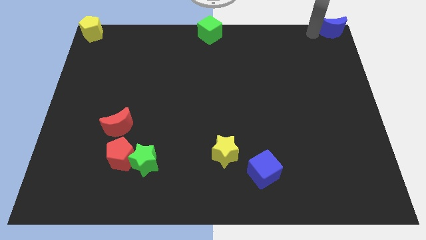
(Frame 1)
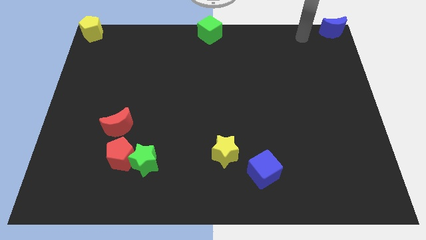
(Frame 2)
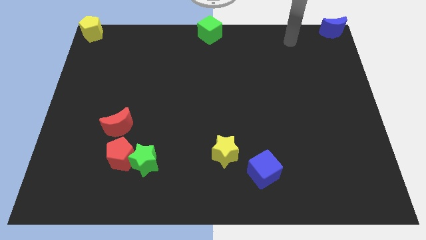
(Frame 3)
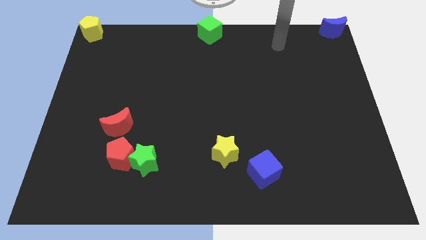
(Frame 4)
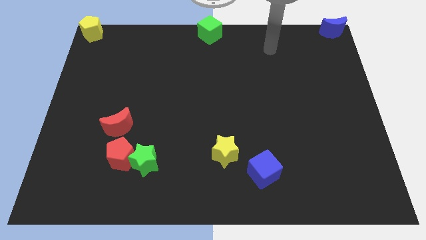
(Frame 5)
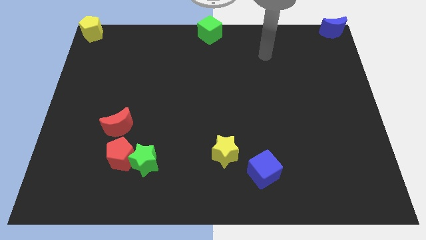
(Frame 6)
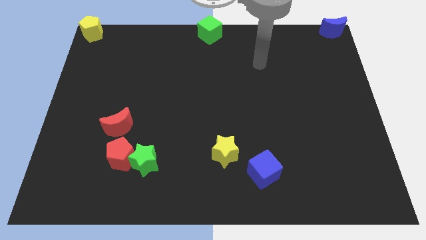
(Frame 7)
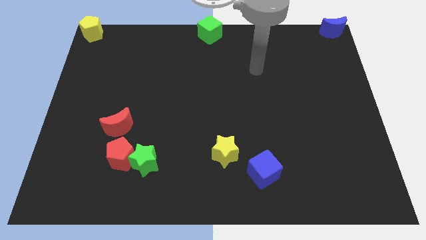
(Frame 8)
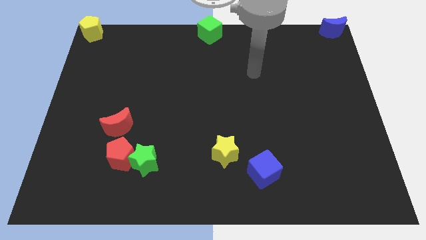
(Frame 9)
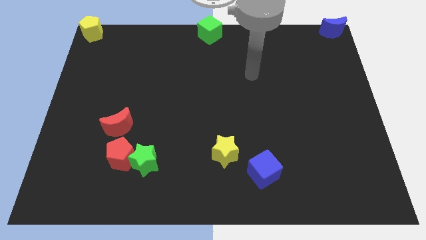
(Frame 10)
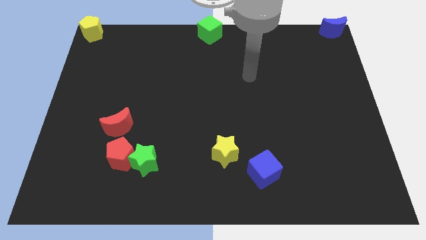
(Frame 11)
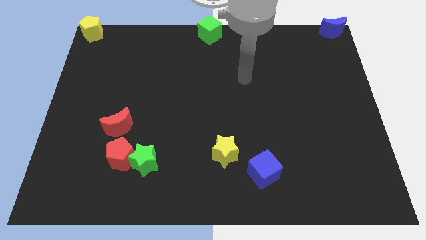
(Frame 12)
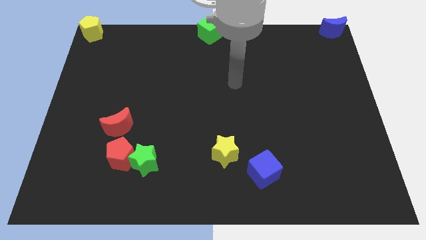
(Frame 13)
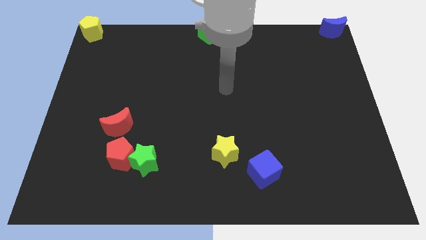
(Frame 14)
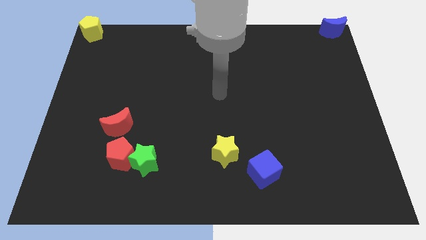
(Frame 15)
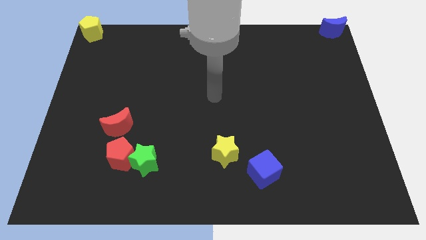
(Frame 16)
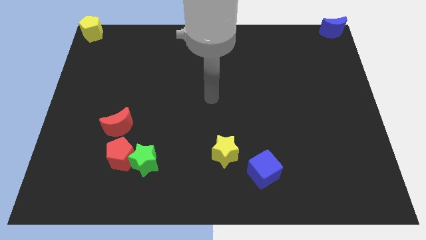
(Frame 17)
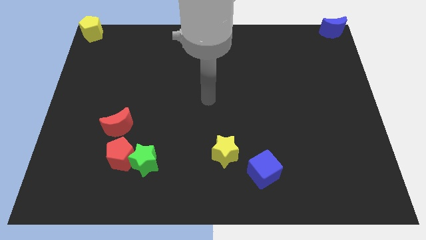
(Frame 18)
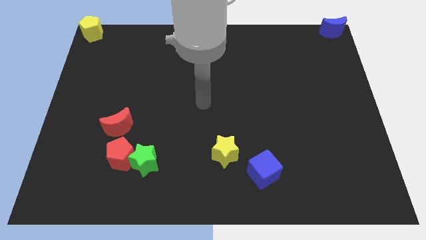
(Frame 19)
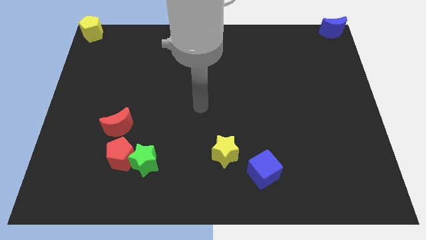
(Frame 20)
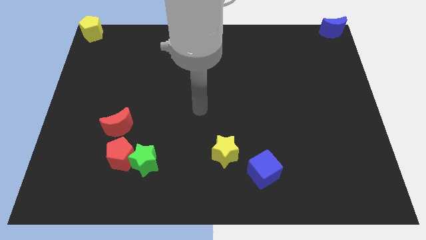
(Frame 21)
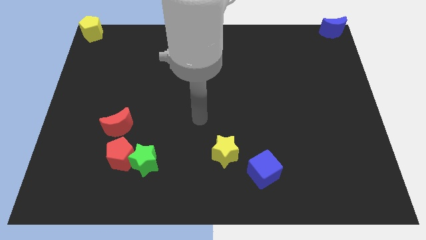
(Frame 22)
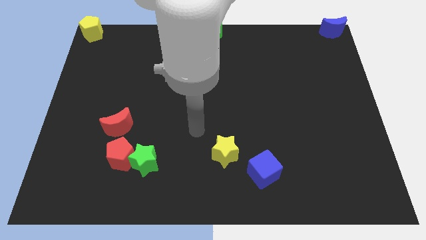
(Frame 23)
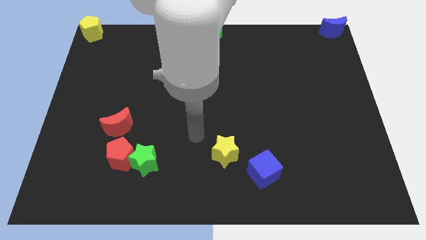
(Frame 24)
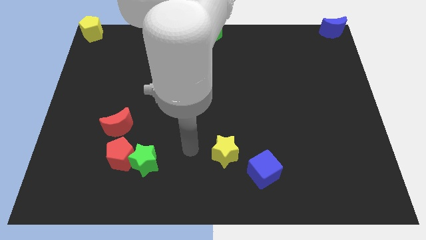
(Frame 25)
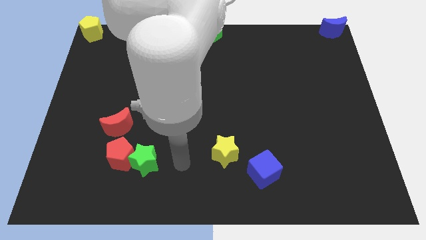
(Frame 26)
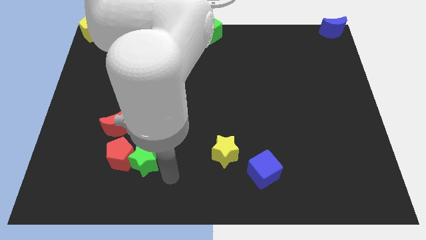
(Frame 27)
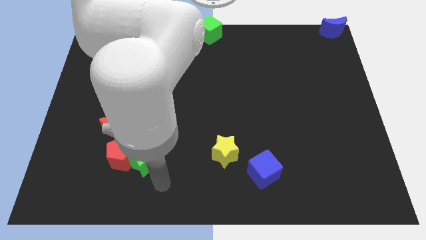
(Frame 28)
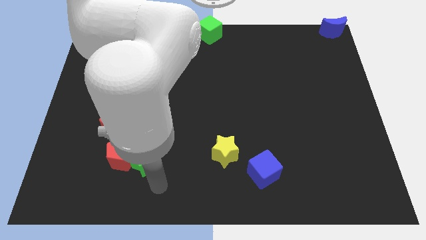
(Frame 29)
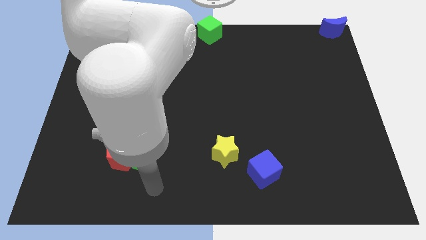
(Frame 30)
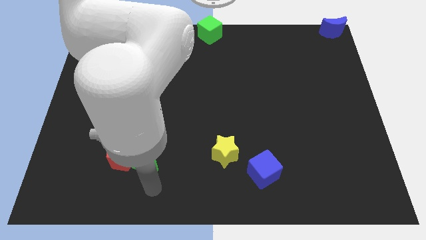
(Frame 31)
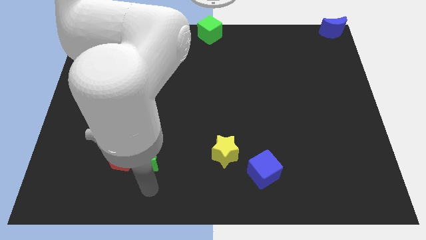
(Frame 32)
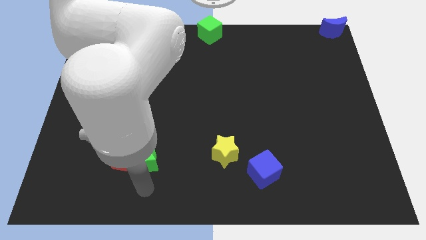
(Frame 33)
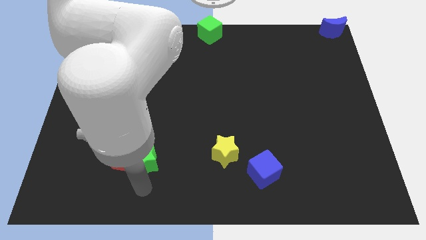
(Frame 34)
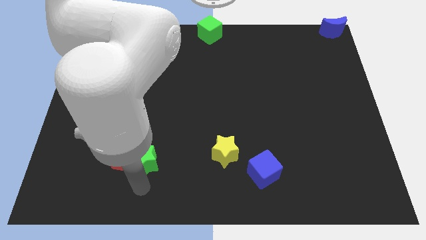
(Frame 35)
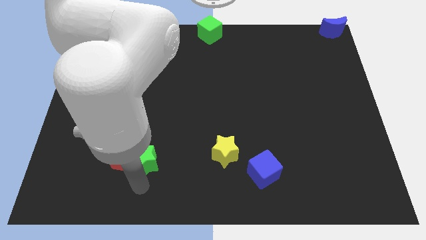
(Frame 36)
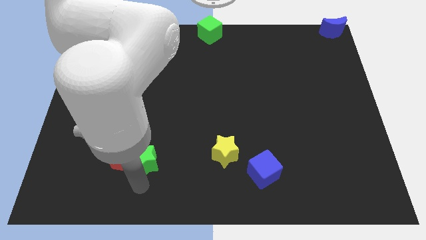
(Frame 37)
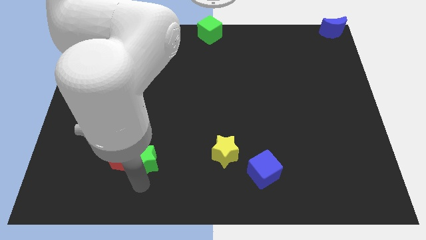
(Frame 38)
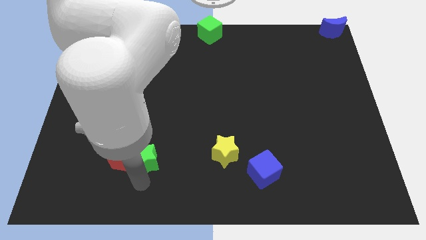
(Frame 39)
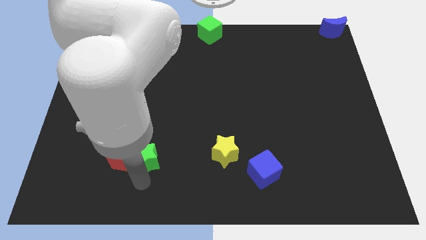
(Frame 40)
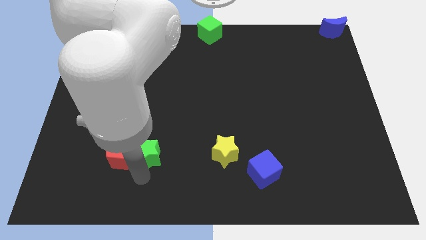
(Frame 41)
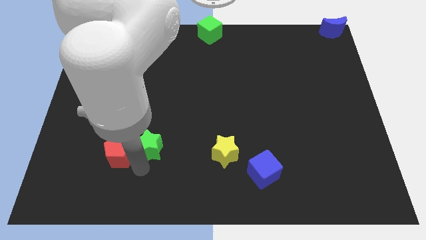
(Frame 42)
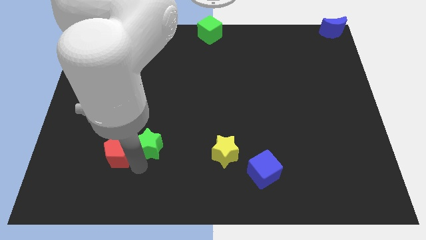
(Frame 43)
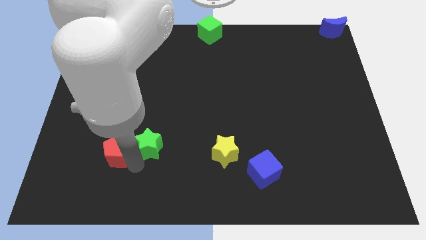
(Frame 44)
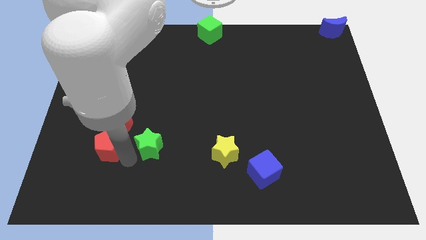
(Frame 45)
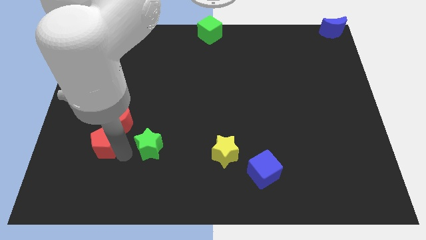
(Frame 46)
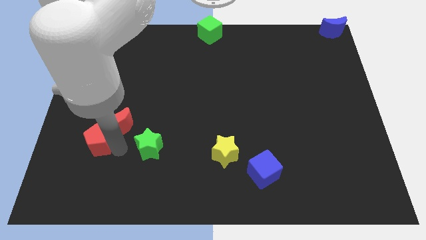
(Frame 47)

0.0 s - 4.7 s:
separate green star and the red pentagon

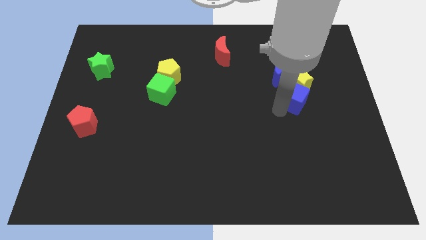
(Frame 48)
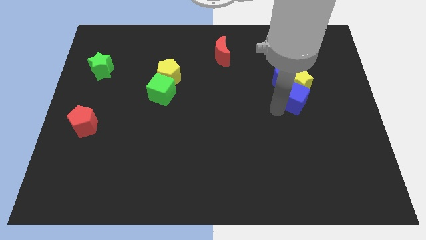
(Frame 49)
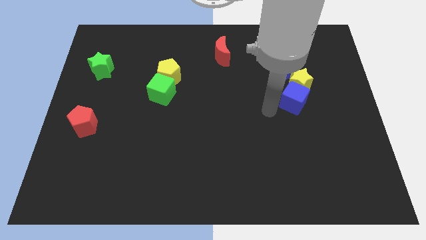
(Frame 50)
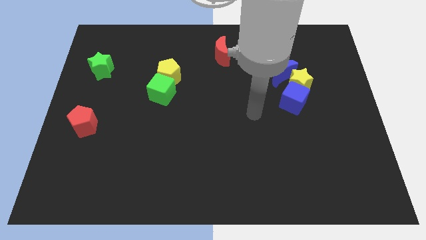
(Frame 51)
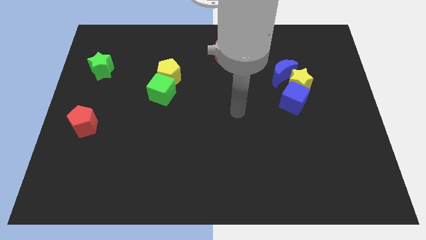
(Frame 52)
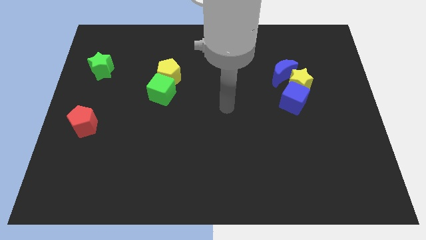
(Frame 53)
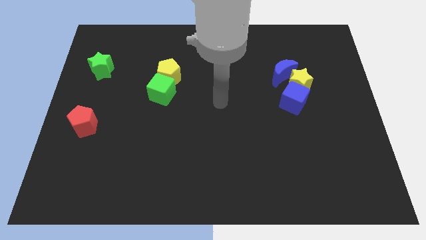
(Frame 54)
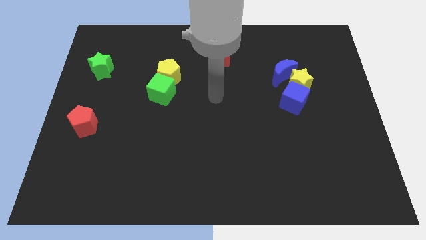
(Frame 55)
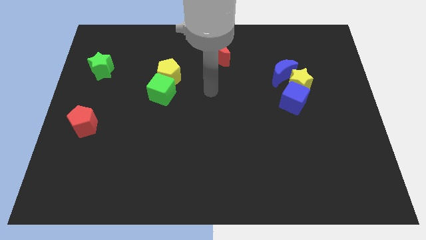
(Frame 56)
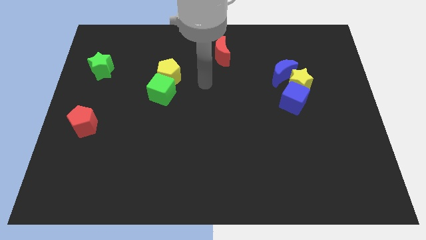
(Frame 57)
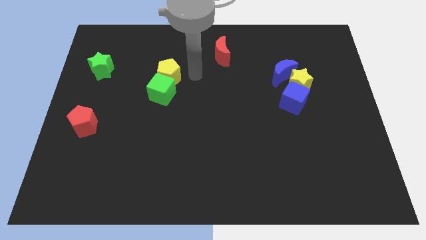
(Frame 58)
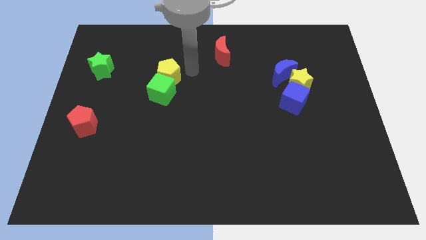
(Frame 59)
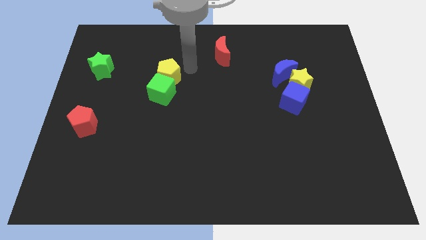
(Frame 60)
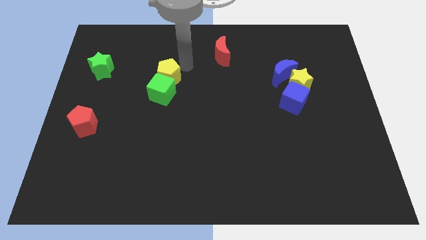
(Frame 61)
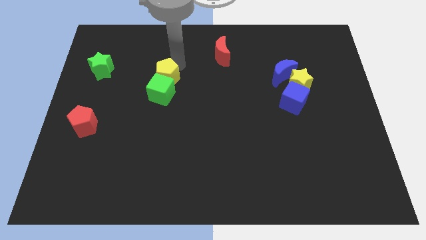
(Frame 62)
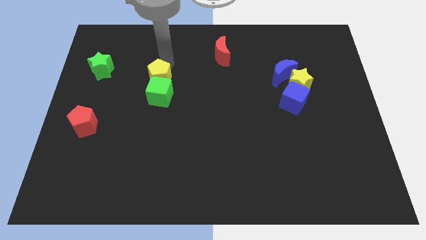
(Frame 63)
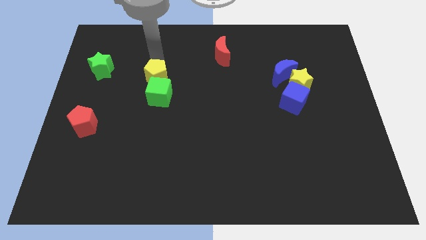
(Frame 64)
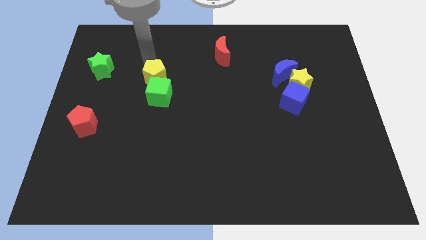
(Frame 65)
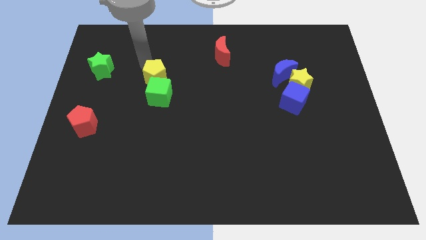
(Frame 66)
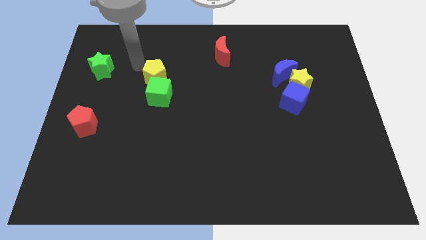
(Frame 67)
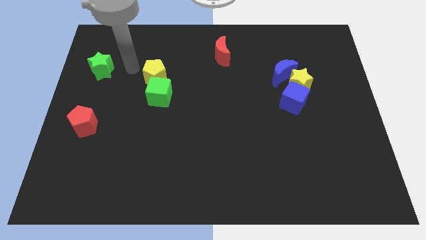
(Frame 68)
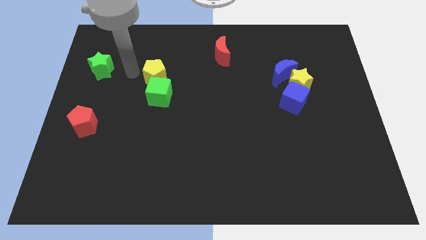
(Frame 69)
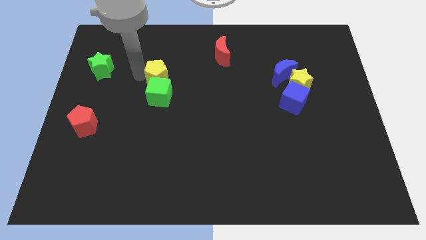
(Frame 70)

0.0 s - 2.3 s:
move your arm to the left of the yellow pentagon

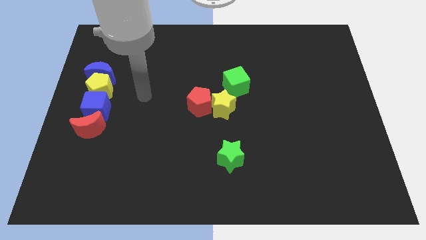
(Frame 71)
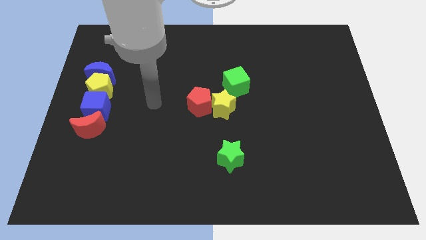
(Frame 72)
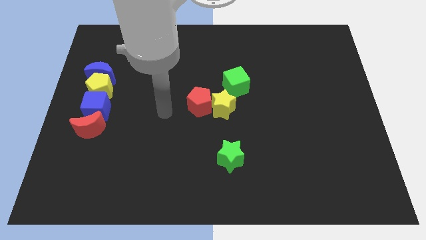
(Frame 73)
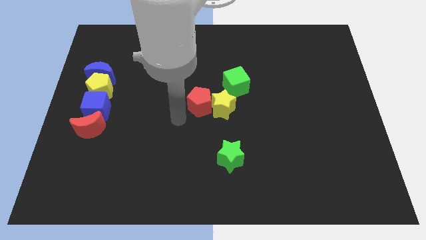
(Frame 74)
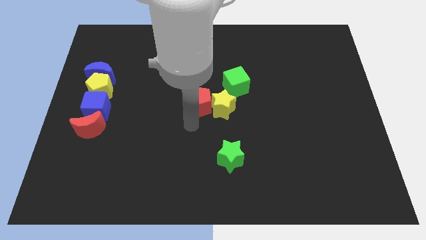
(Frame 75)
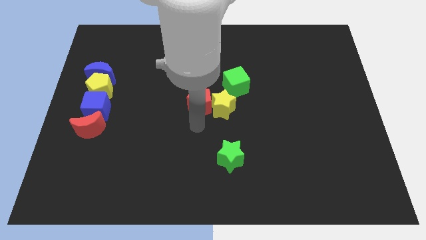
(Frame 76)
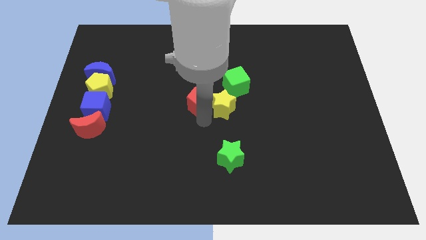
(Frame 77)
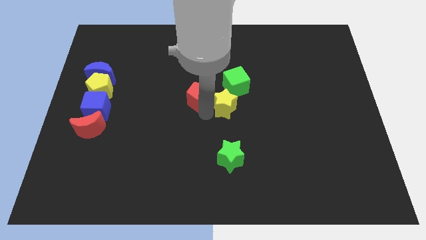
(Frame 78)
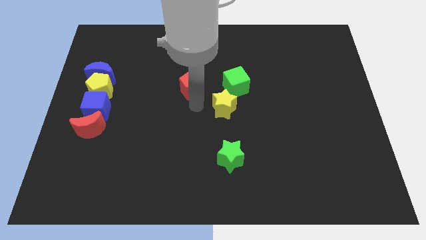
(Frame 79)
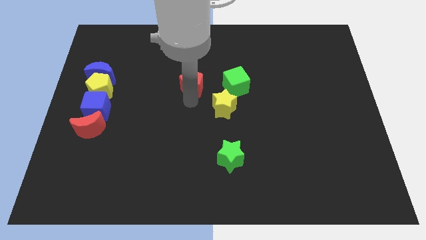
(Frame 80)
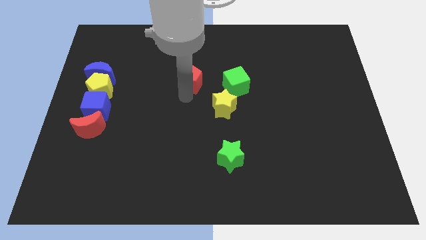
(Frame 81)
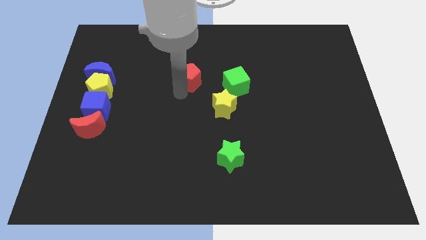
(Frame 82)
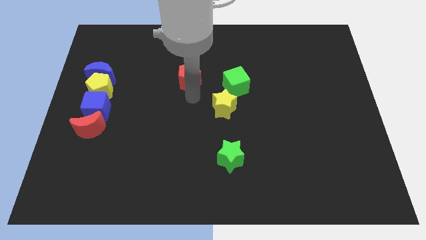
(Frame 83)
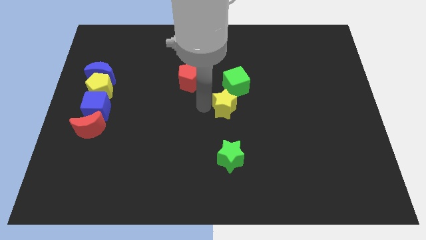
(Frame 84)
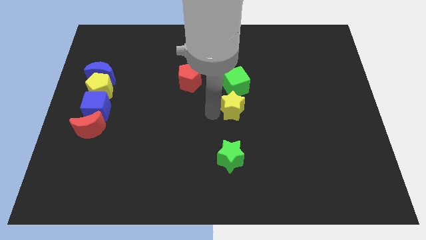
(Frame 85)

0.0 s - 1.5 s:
move the red pentagon diagonal to the left of the green cube

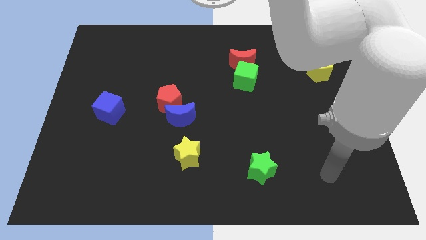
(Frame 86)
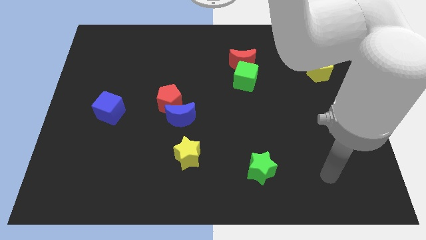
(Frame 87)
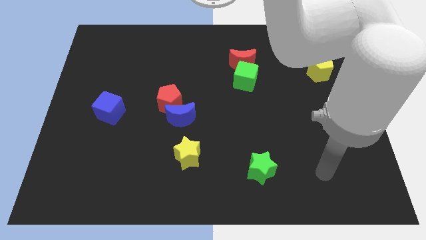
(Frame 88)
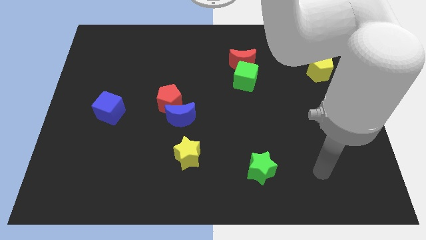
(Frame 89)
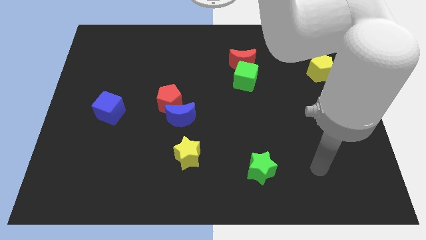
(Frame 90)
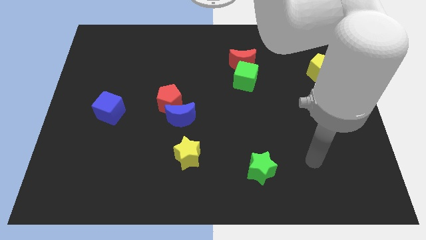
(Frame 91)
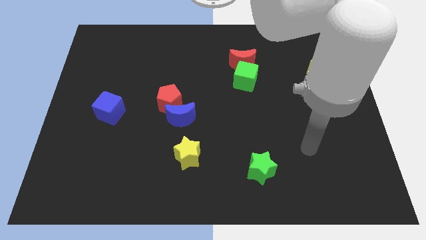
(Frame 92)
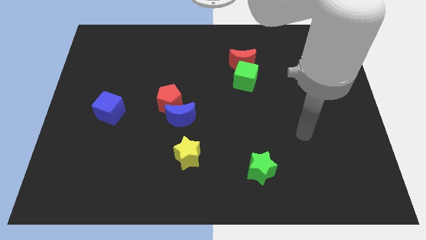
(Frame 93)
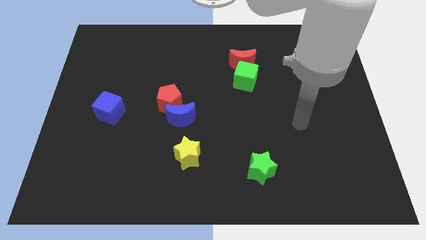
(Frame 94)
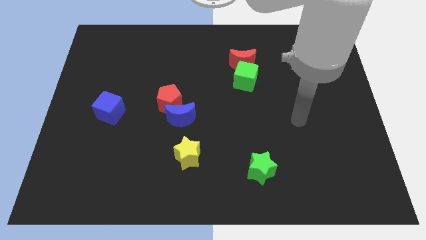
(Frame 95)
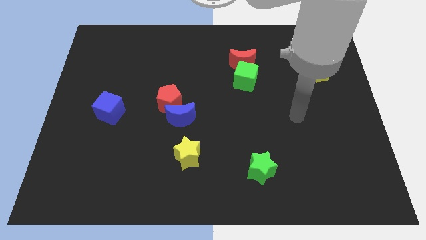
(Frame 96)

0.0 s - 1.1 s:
slide your arm slightly upwards
